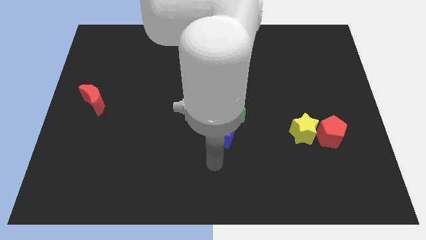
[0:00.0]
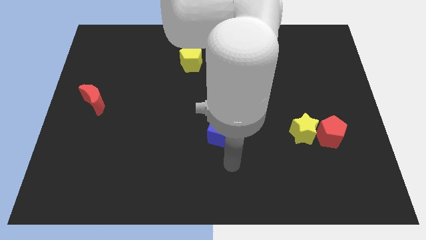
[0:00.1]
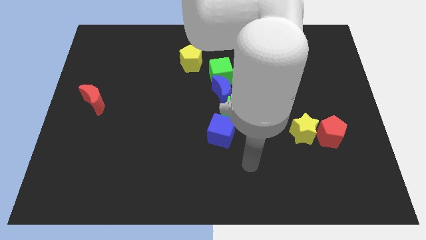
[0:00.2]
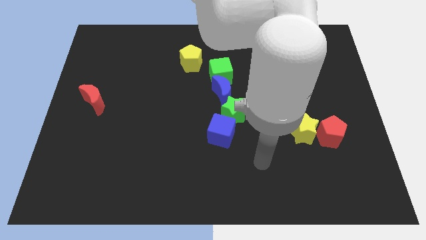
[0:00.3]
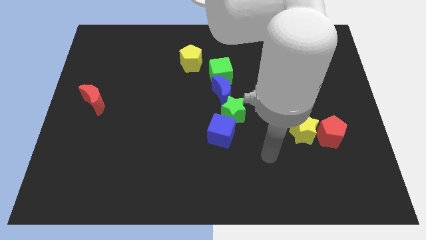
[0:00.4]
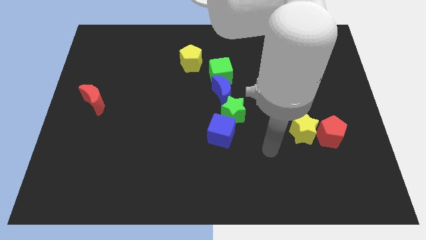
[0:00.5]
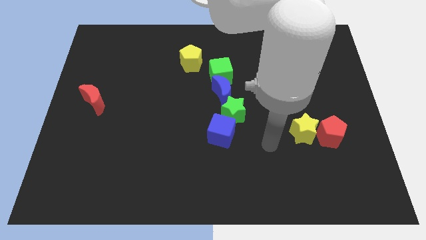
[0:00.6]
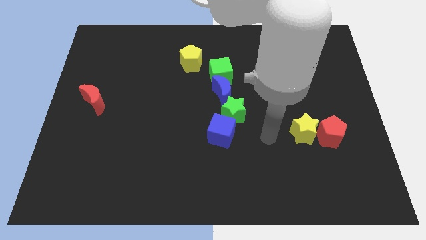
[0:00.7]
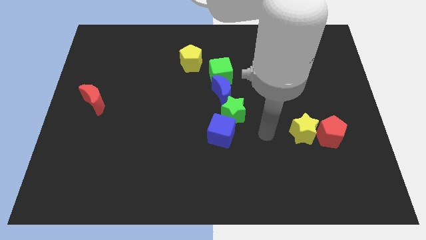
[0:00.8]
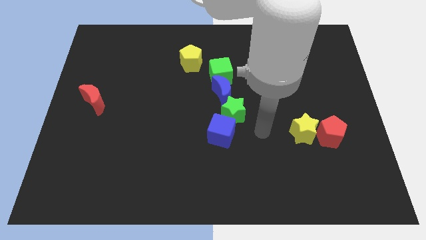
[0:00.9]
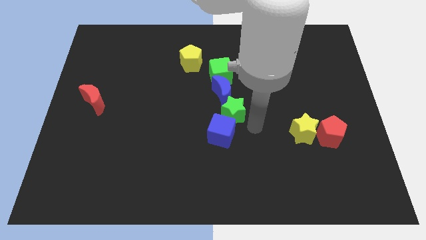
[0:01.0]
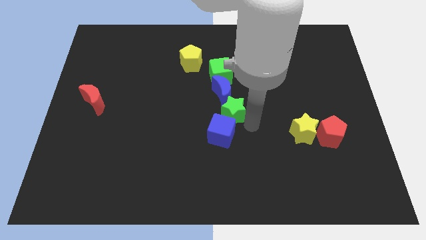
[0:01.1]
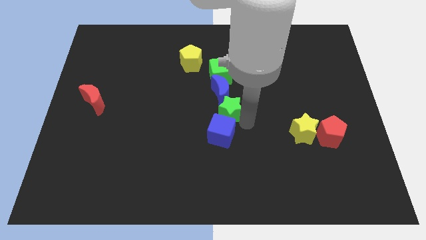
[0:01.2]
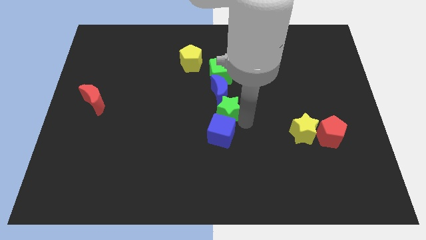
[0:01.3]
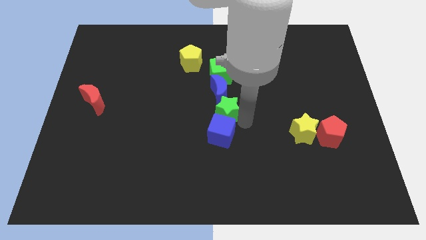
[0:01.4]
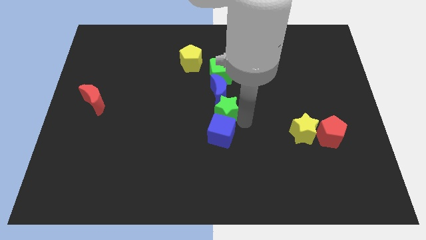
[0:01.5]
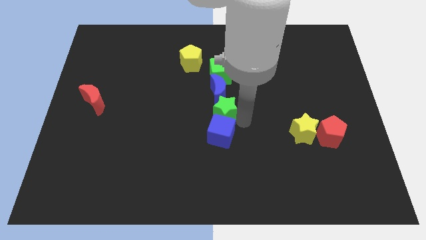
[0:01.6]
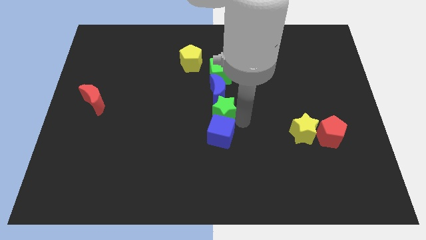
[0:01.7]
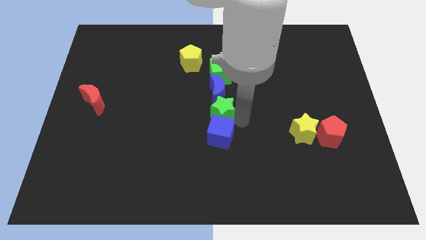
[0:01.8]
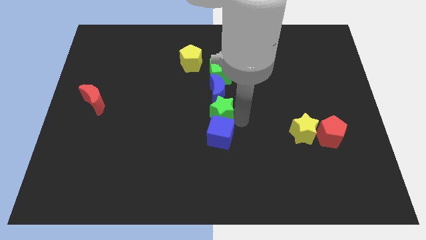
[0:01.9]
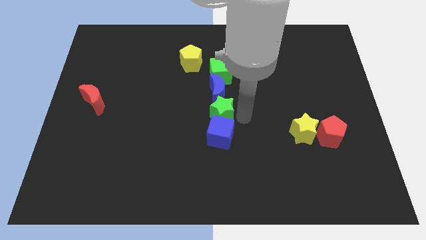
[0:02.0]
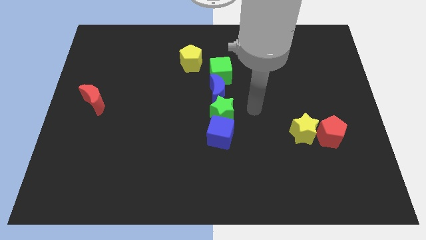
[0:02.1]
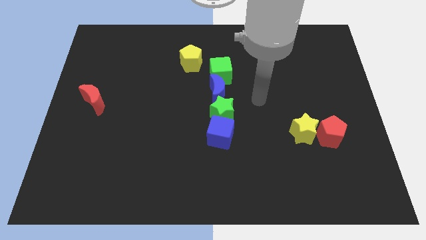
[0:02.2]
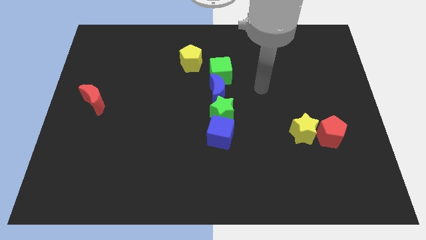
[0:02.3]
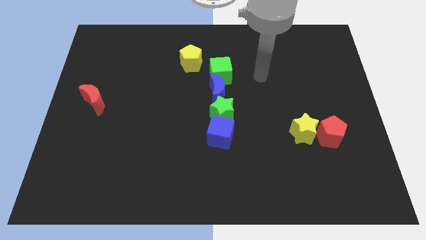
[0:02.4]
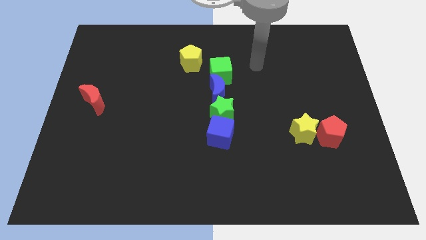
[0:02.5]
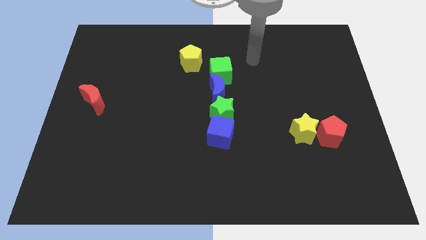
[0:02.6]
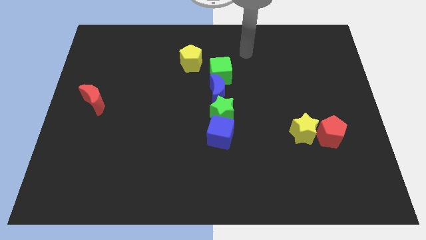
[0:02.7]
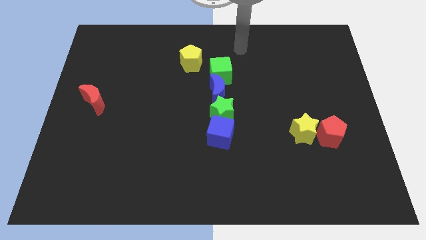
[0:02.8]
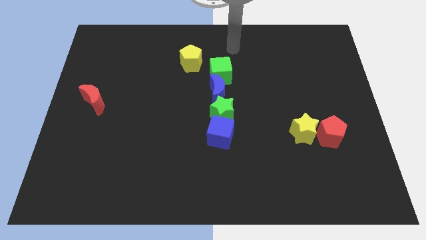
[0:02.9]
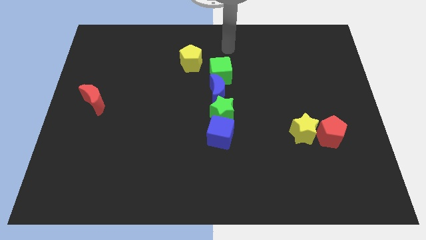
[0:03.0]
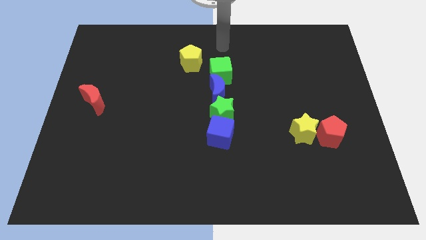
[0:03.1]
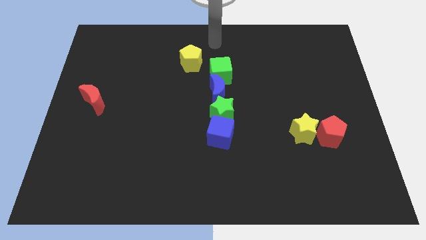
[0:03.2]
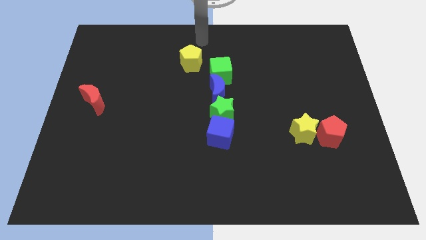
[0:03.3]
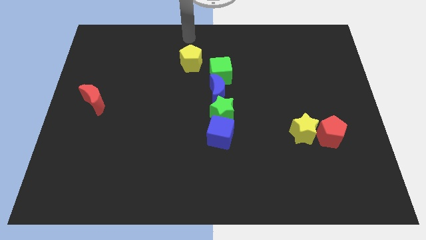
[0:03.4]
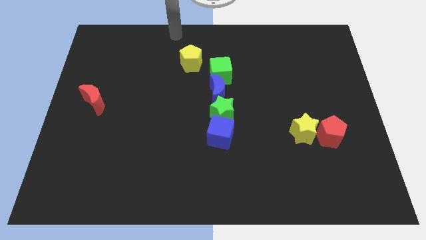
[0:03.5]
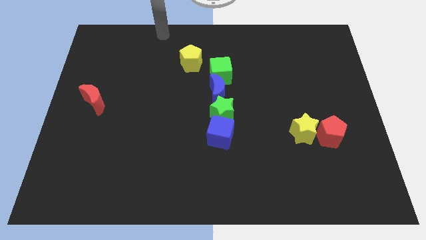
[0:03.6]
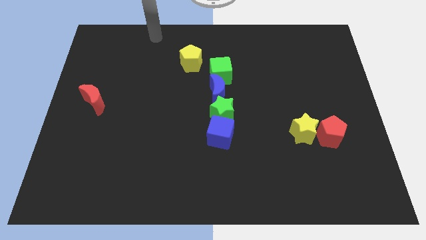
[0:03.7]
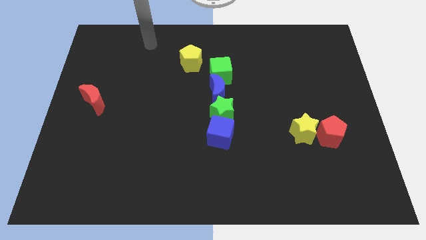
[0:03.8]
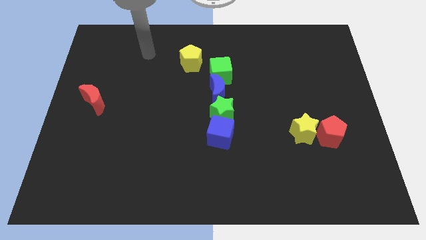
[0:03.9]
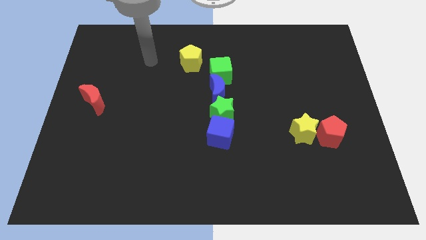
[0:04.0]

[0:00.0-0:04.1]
push green star so that green block blue crescent and blue block in a line

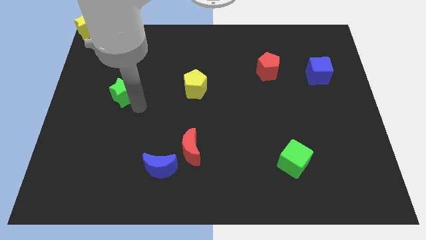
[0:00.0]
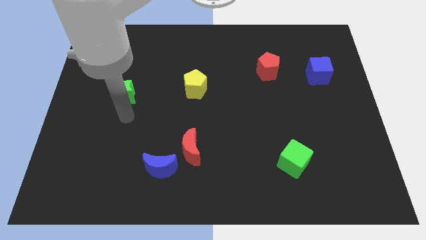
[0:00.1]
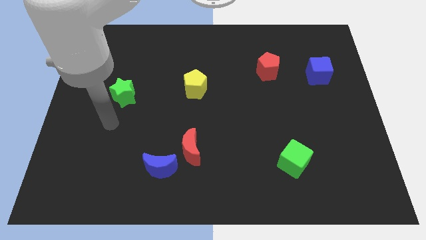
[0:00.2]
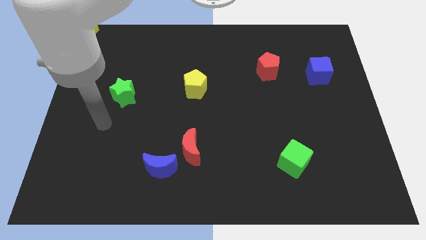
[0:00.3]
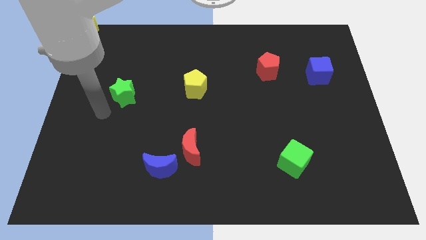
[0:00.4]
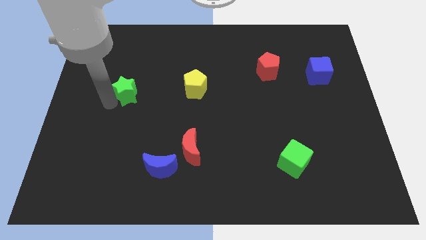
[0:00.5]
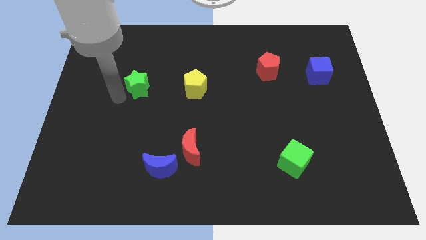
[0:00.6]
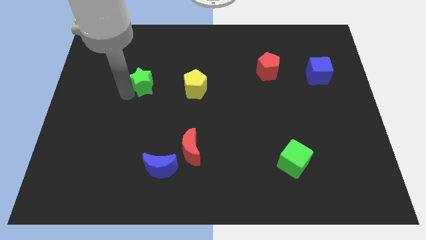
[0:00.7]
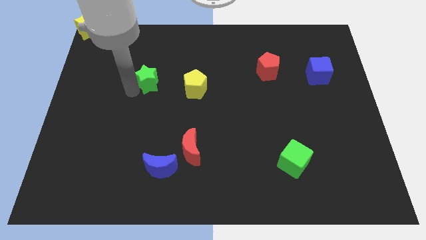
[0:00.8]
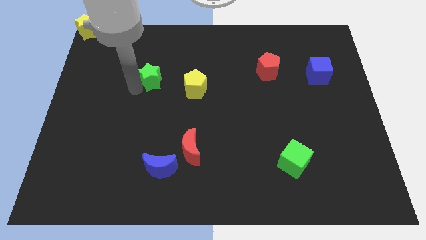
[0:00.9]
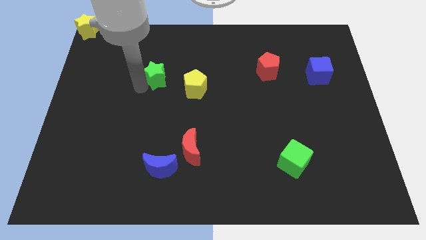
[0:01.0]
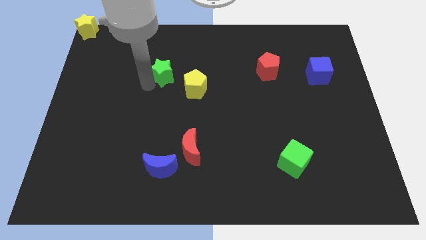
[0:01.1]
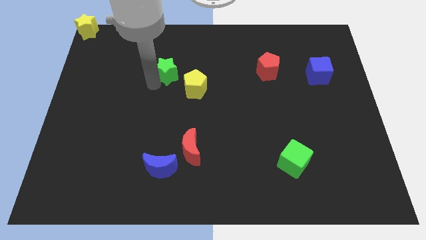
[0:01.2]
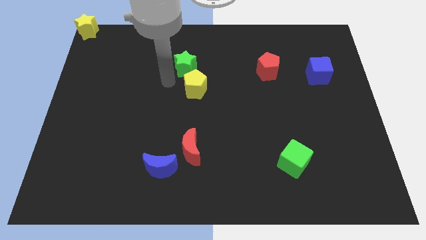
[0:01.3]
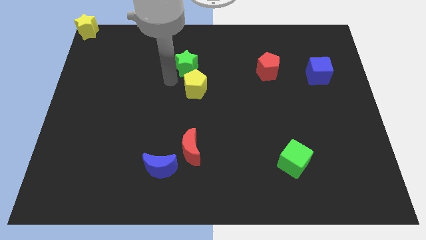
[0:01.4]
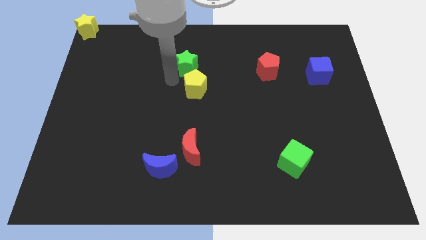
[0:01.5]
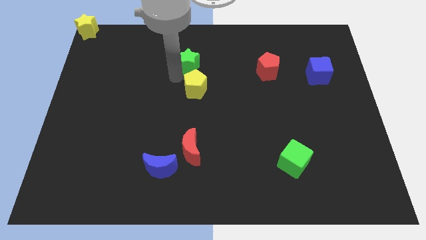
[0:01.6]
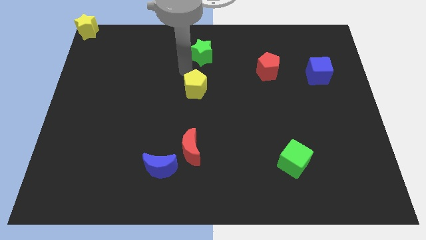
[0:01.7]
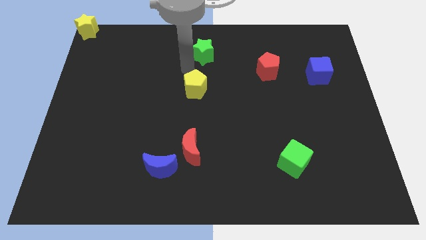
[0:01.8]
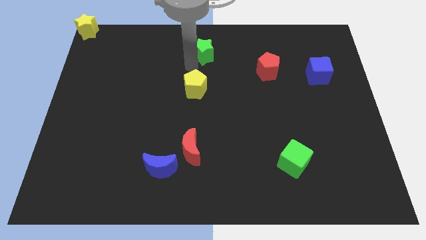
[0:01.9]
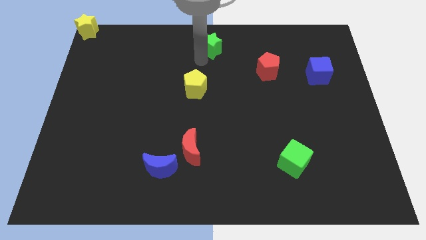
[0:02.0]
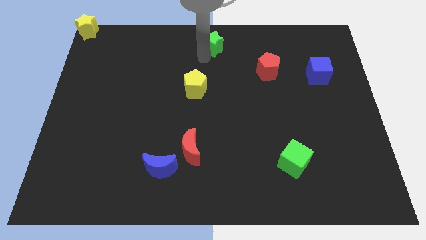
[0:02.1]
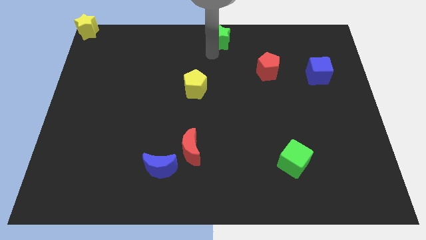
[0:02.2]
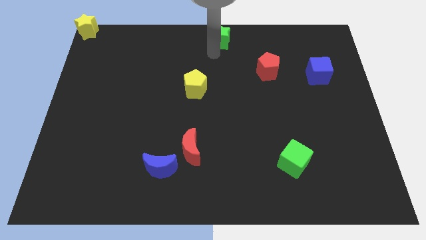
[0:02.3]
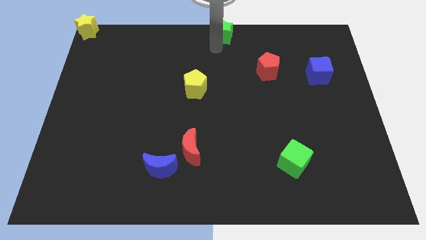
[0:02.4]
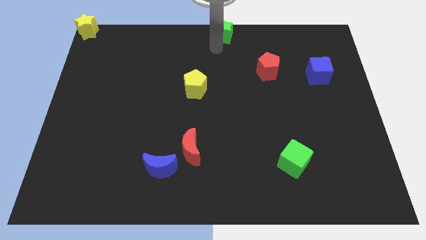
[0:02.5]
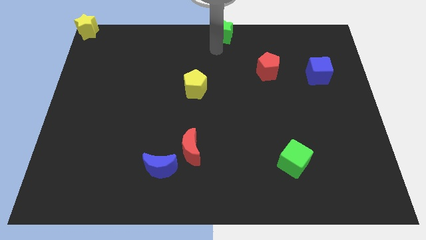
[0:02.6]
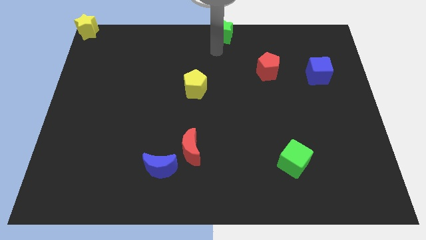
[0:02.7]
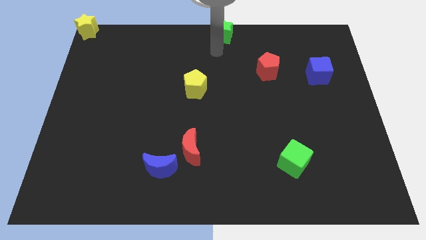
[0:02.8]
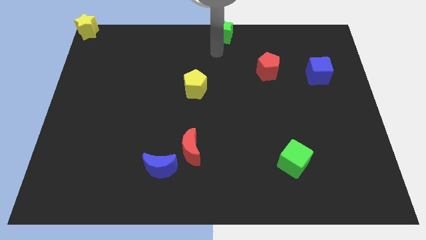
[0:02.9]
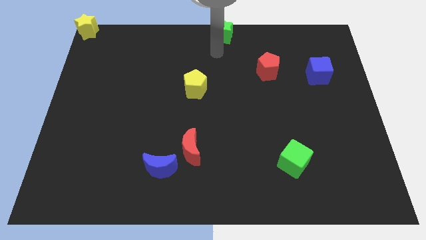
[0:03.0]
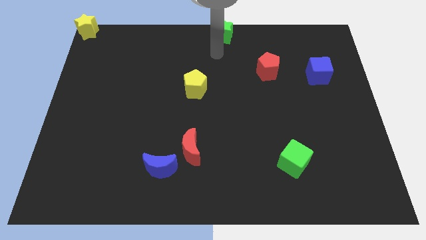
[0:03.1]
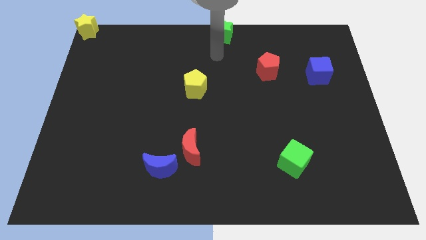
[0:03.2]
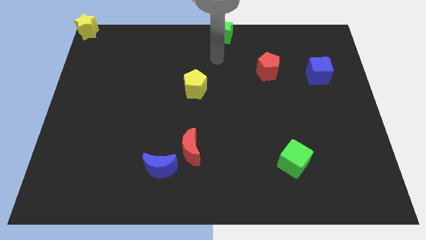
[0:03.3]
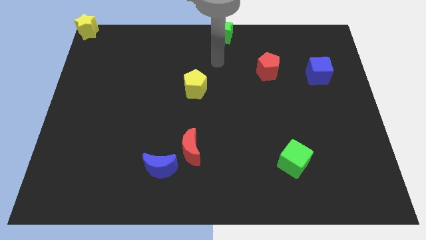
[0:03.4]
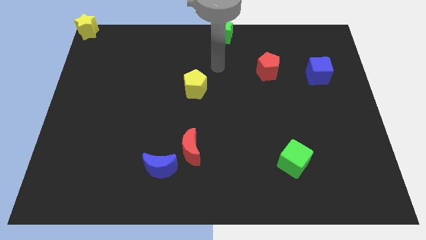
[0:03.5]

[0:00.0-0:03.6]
place the green star at the top center of the board

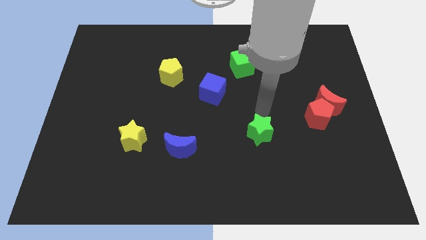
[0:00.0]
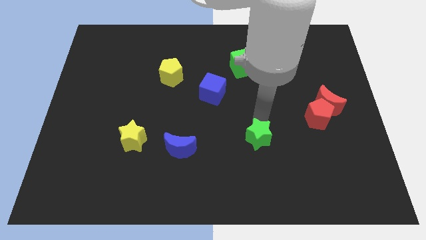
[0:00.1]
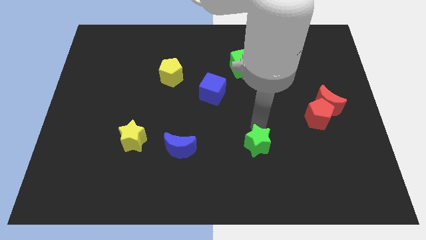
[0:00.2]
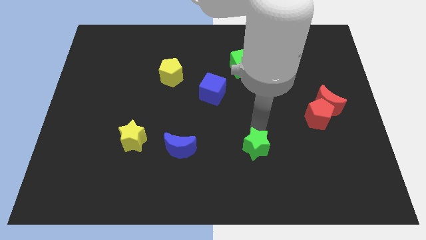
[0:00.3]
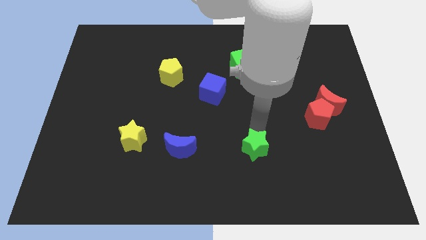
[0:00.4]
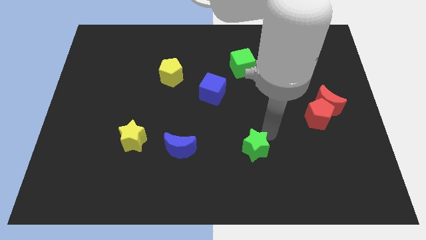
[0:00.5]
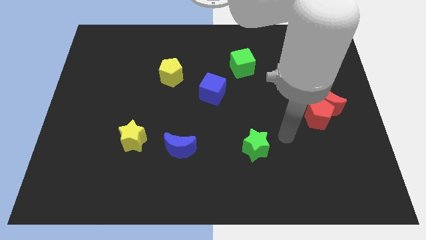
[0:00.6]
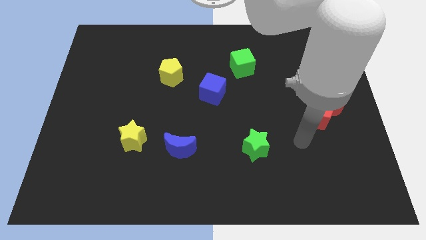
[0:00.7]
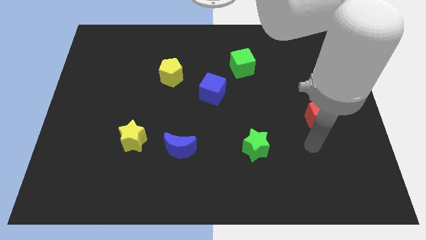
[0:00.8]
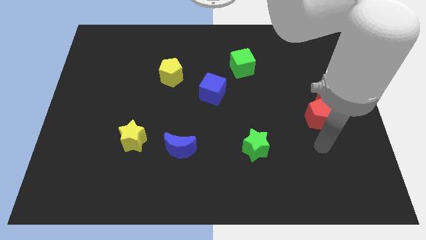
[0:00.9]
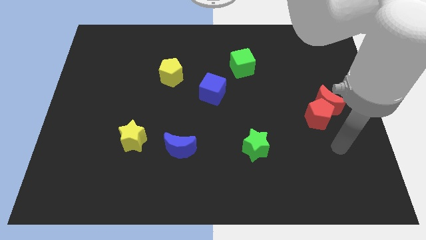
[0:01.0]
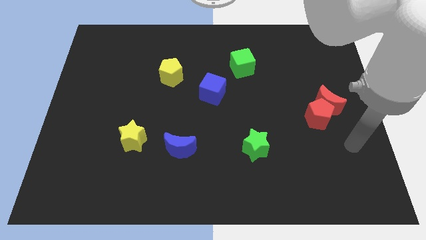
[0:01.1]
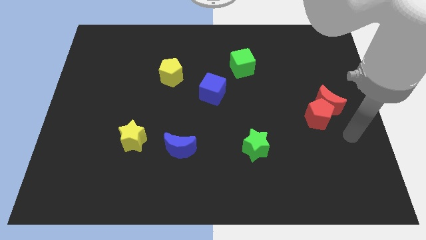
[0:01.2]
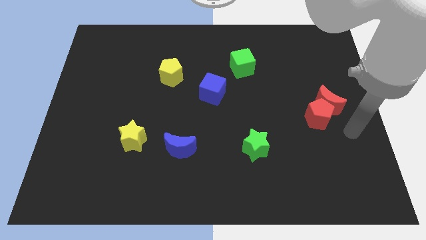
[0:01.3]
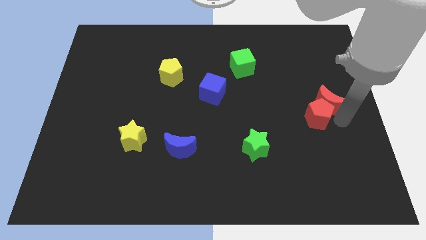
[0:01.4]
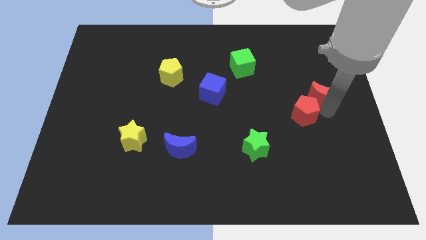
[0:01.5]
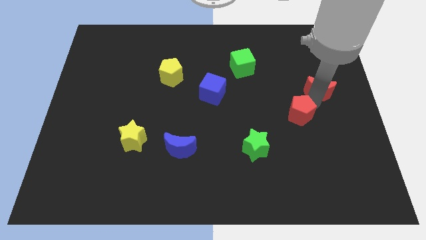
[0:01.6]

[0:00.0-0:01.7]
place your arm between red pentagon and red moon
